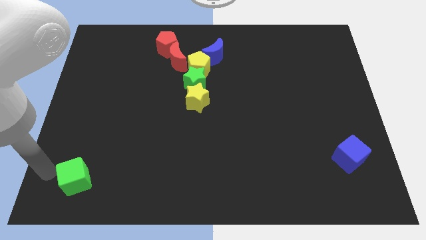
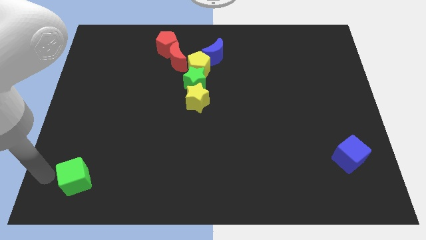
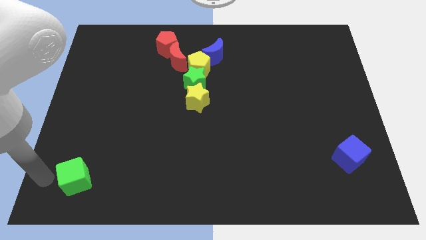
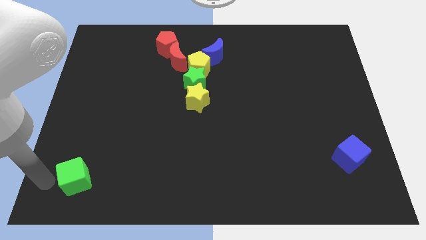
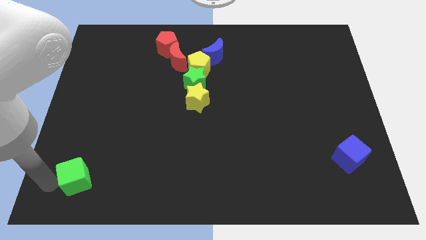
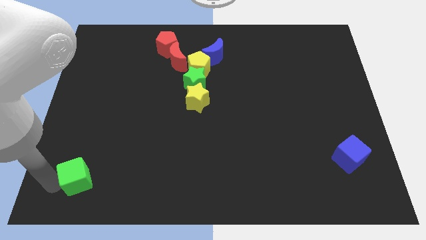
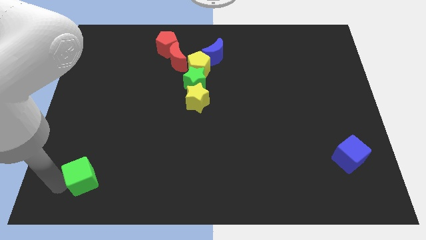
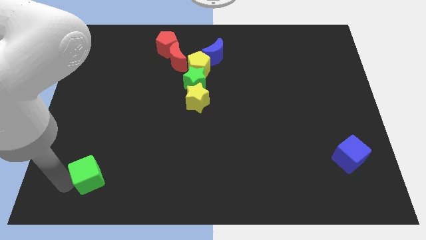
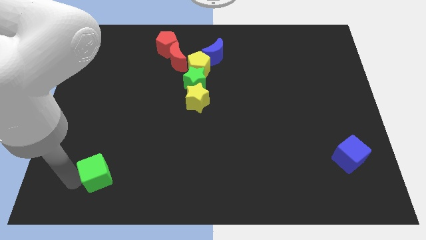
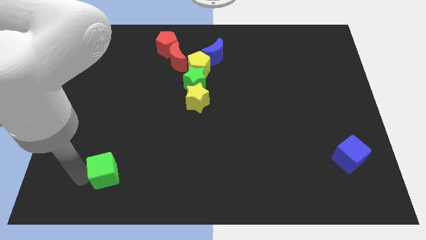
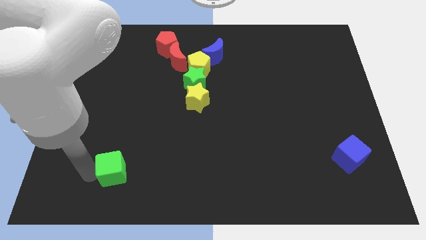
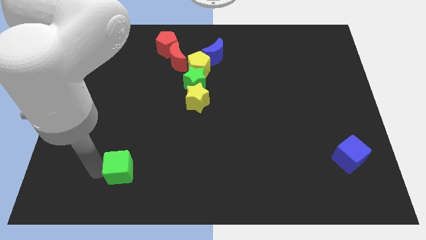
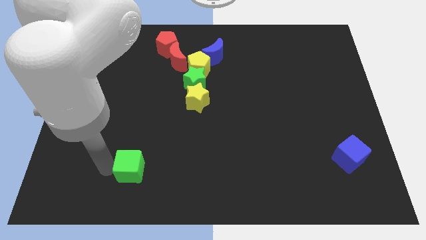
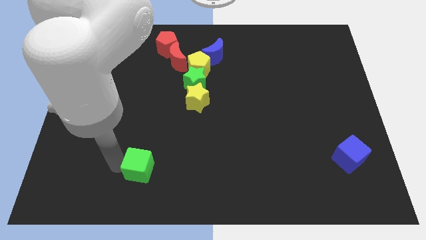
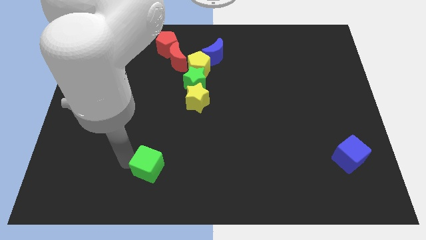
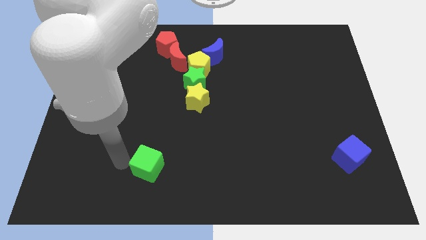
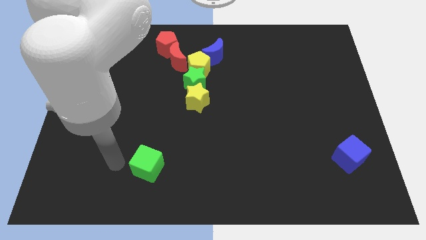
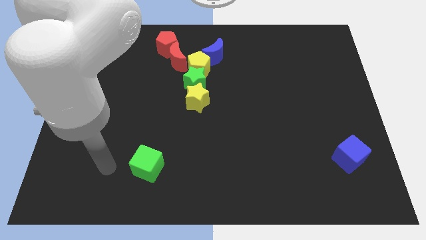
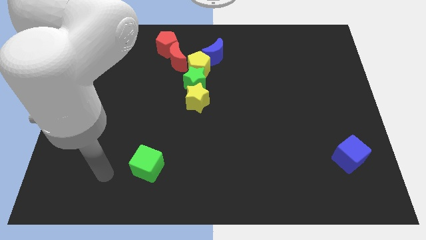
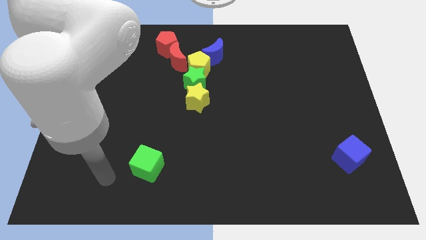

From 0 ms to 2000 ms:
move the green cube daigonally to the yellow star

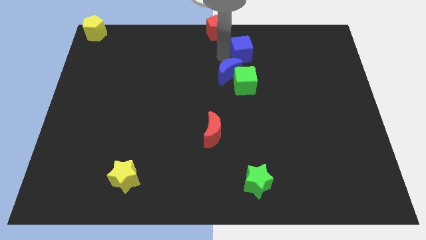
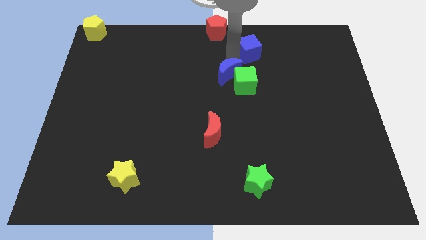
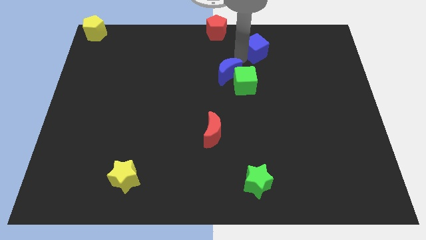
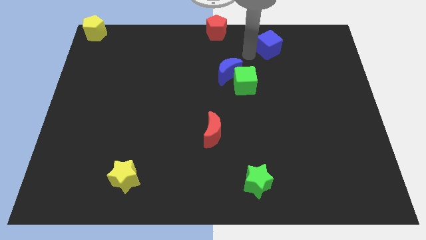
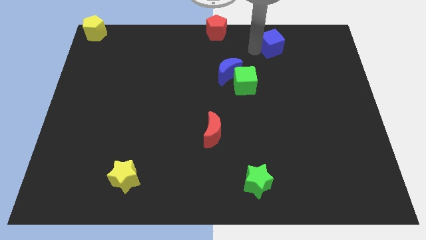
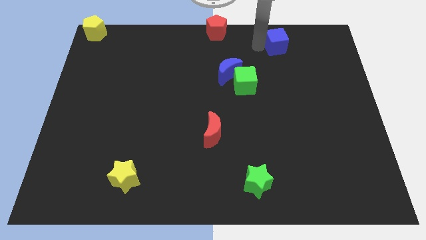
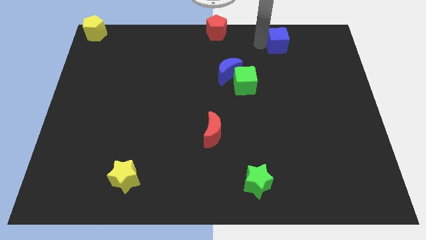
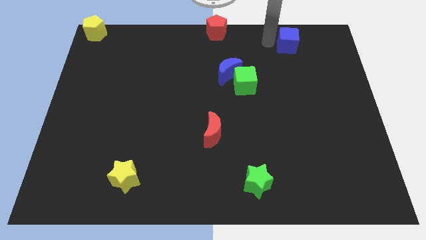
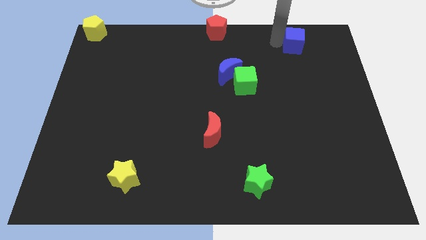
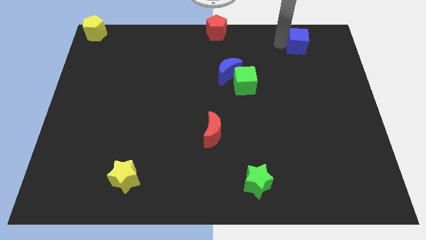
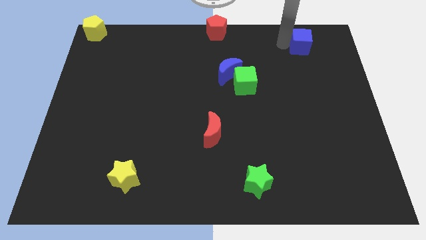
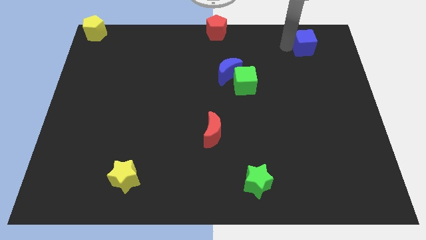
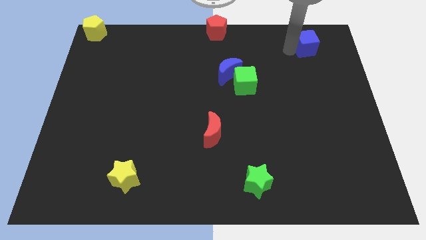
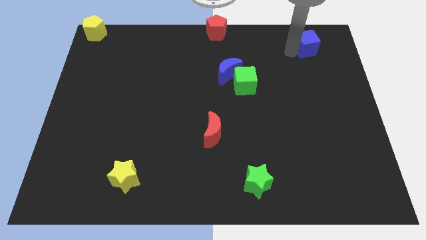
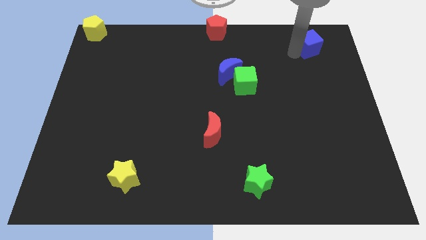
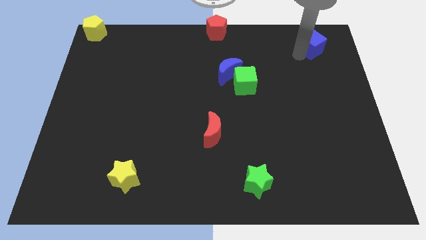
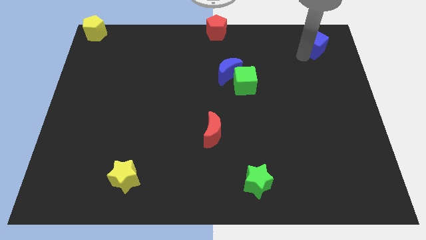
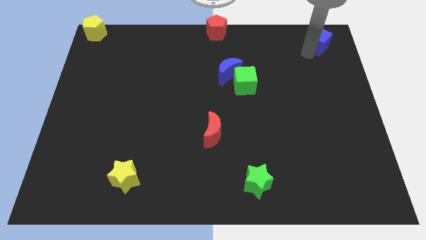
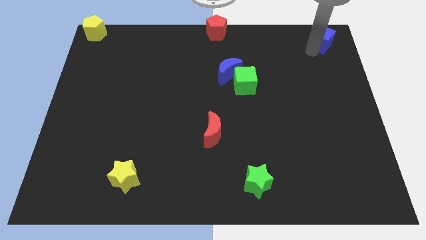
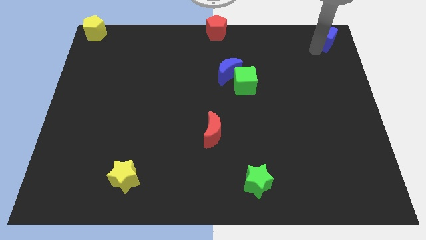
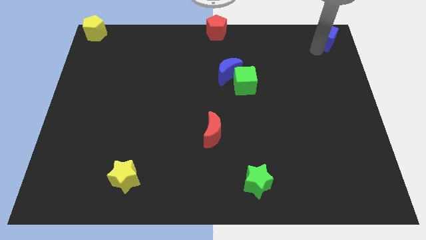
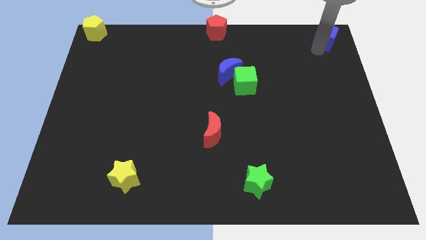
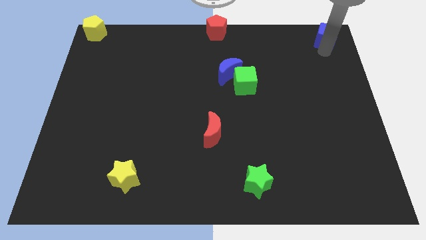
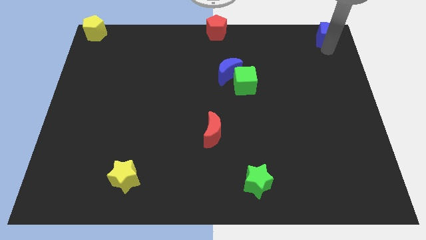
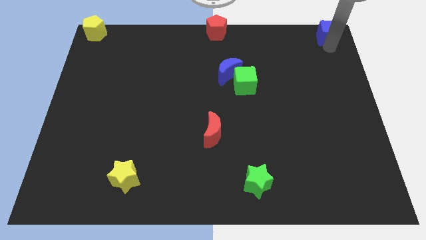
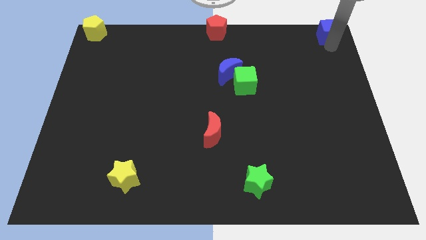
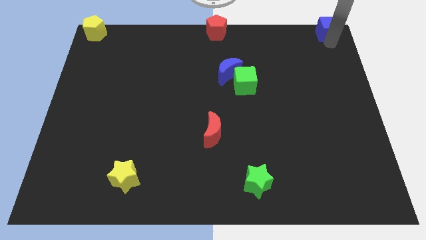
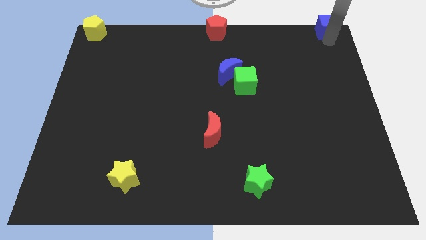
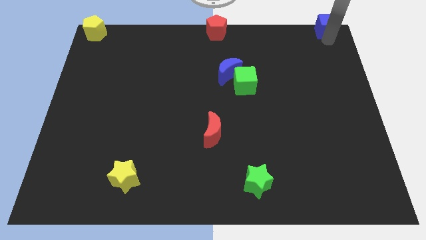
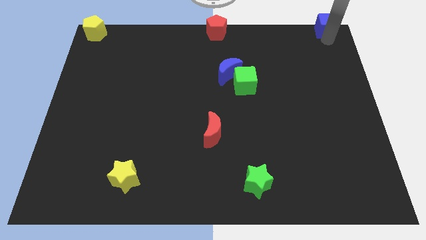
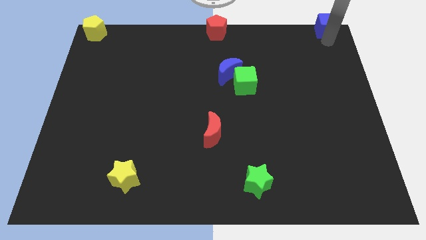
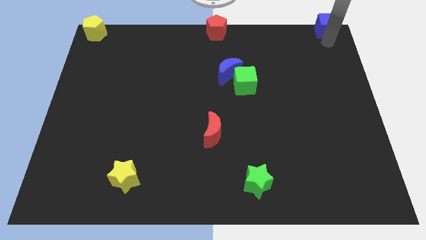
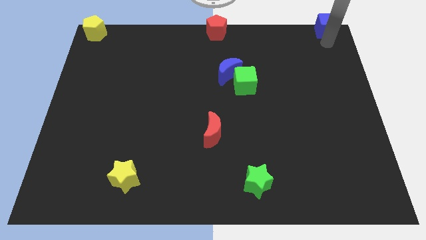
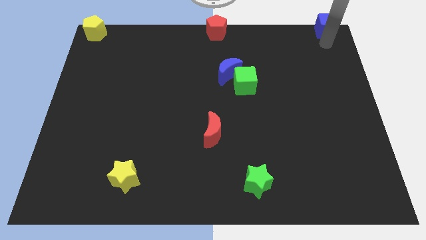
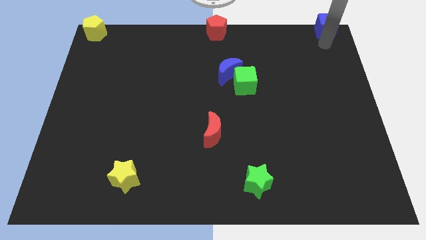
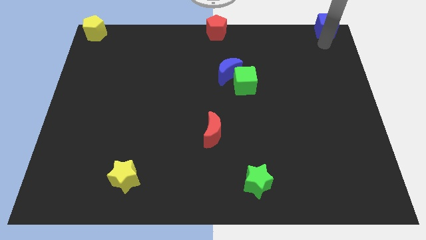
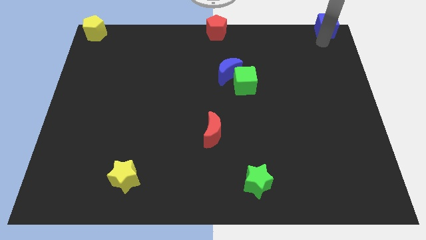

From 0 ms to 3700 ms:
move the blue cube to the top right corner of the board

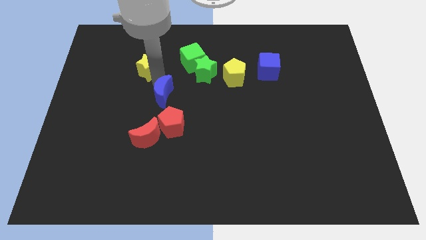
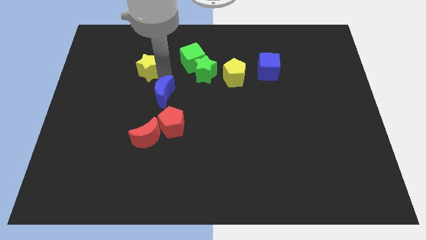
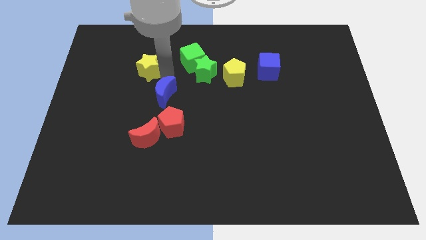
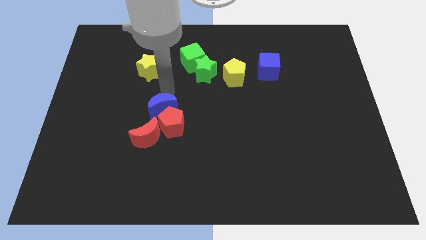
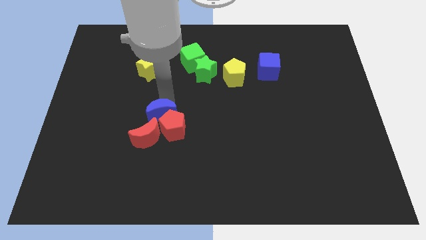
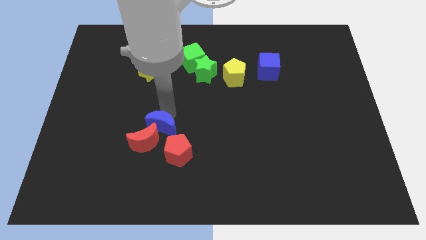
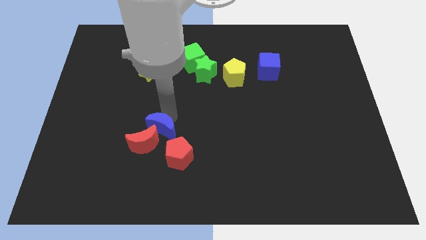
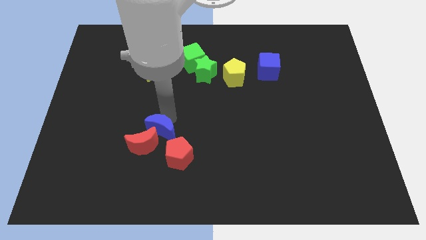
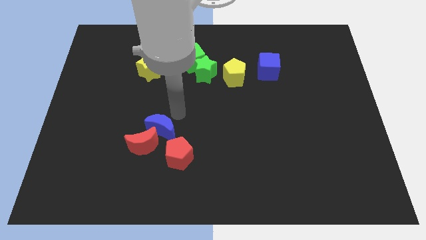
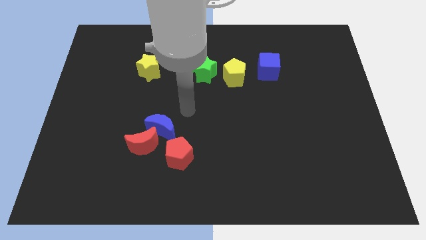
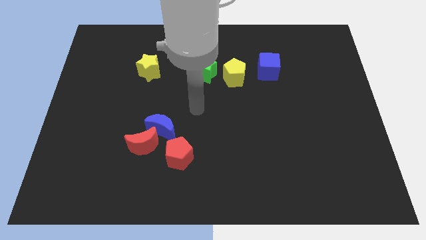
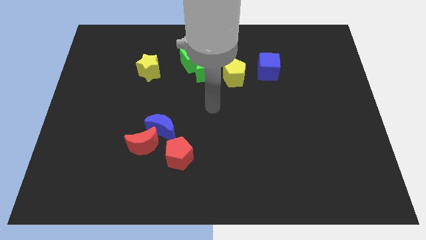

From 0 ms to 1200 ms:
push the blue crescent towards down

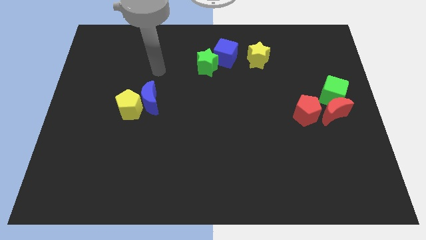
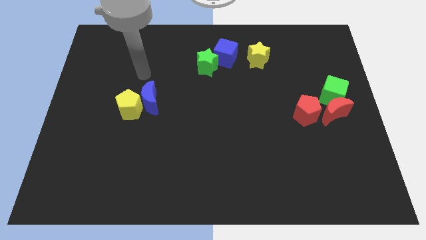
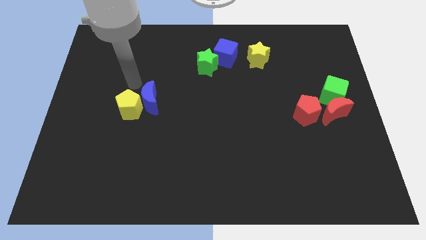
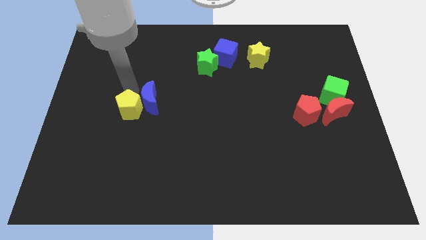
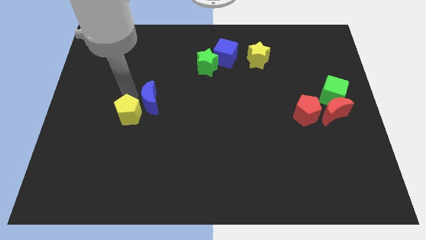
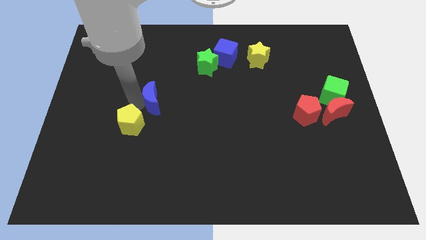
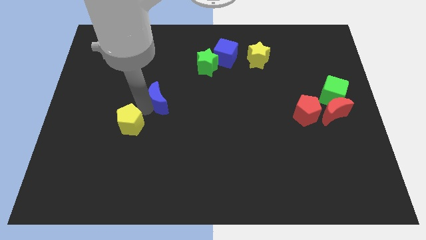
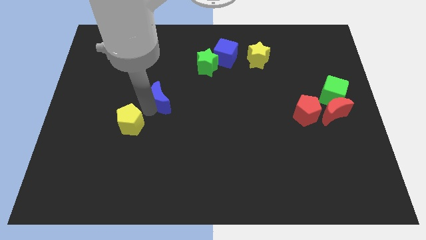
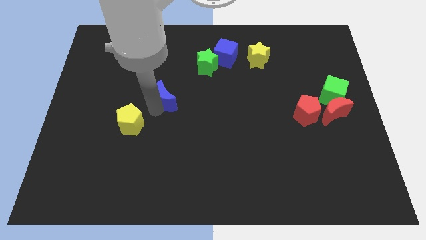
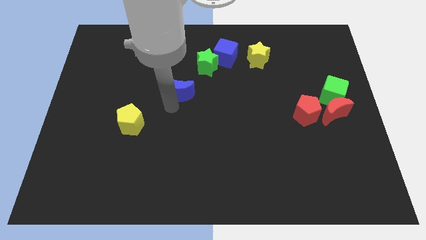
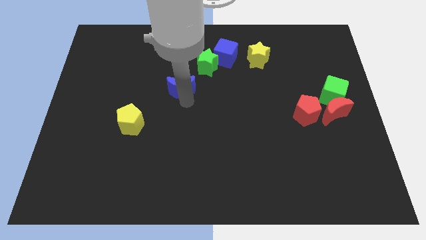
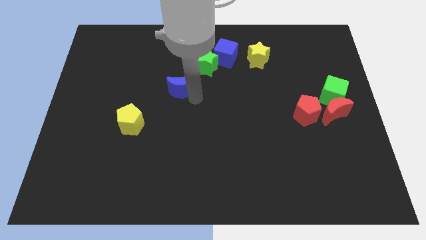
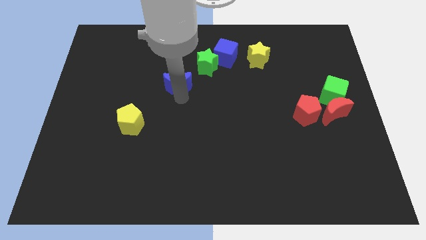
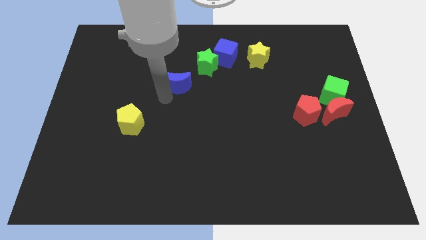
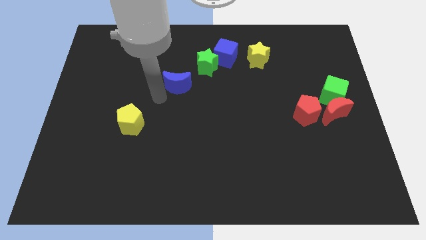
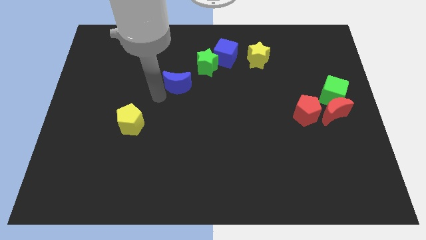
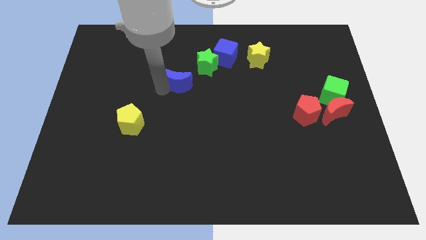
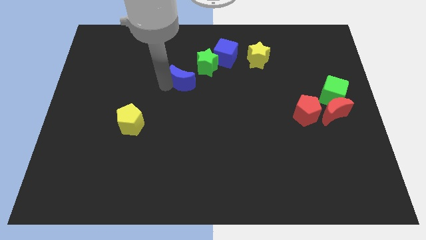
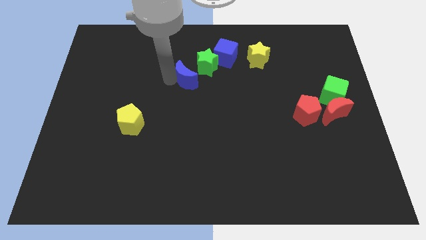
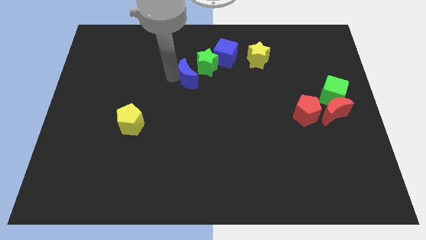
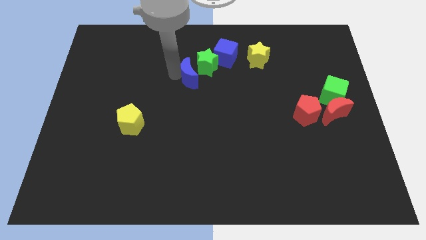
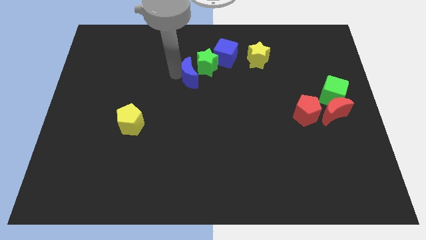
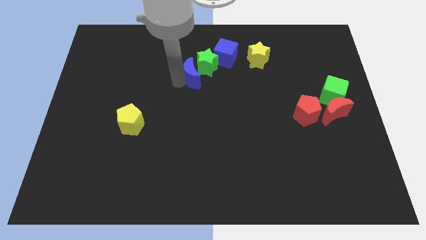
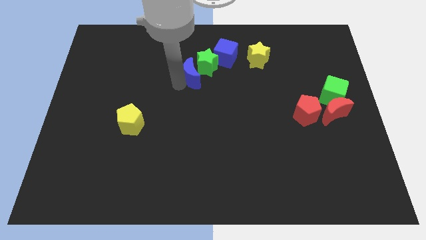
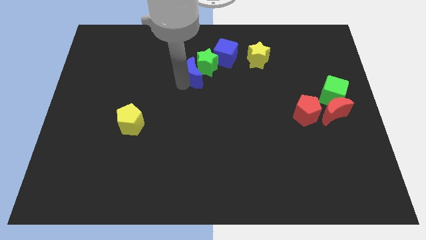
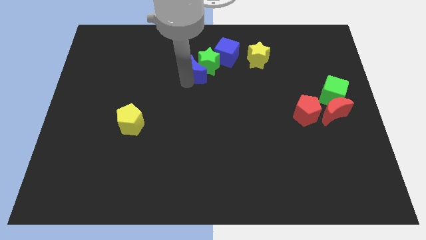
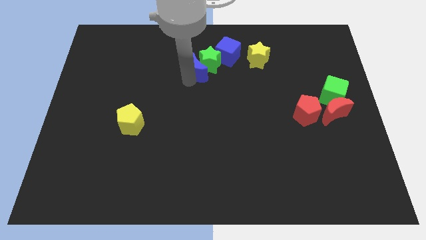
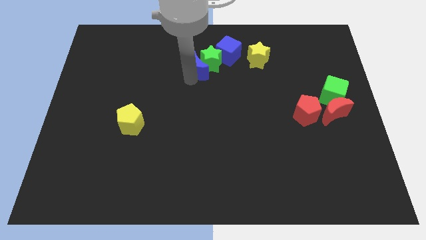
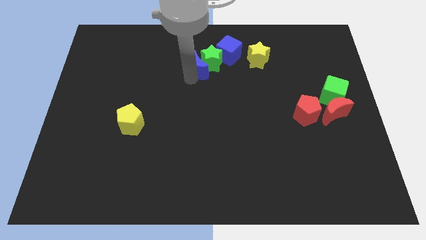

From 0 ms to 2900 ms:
push blue crescent into the green star
